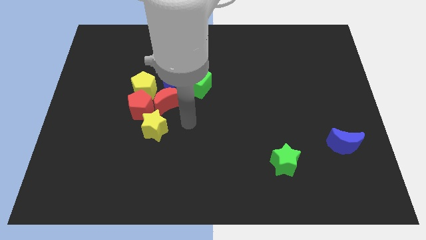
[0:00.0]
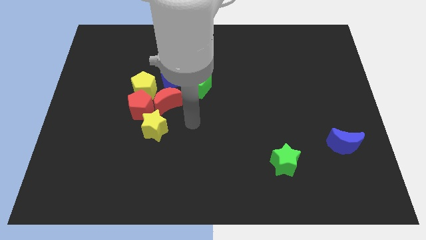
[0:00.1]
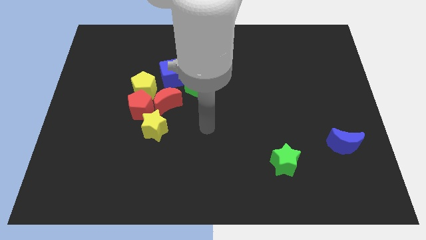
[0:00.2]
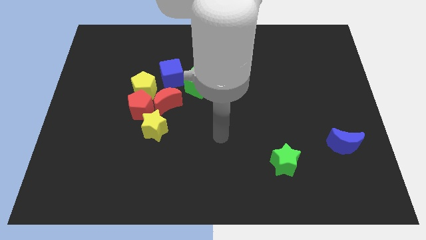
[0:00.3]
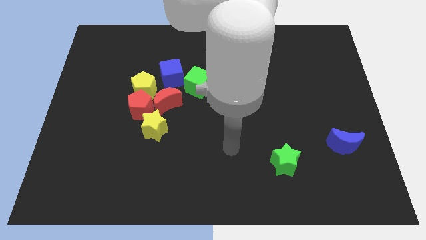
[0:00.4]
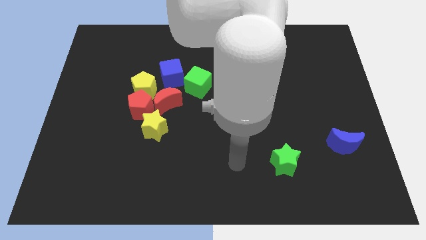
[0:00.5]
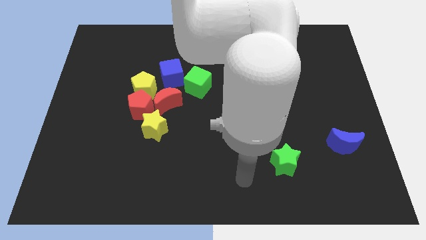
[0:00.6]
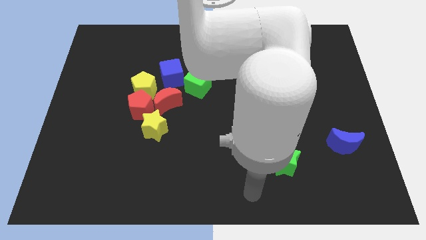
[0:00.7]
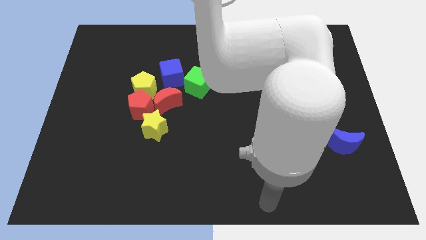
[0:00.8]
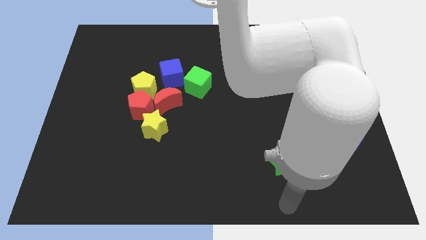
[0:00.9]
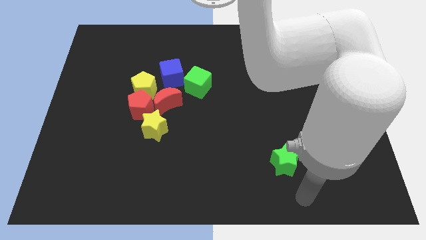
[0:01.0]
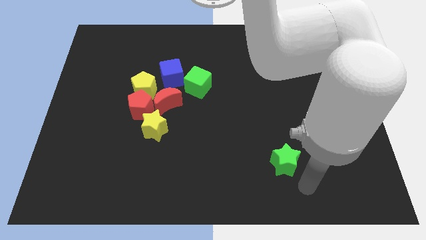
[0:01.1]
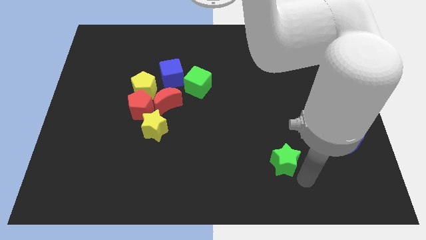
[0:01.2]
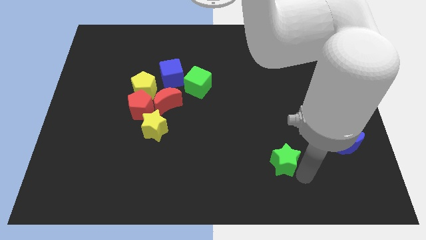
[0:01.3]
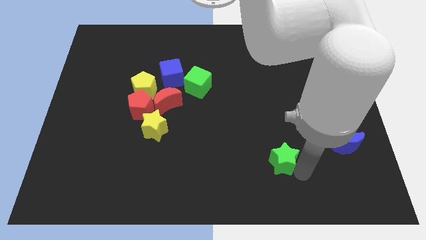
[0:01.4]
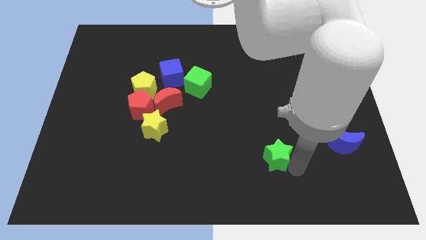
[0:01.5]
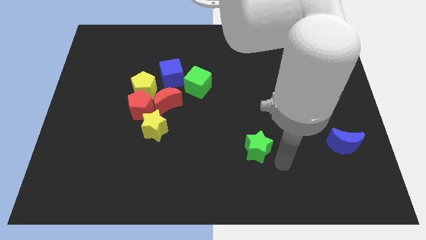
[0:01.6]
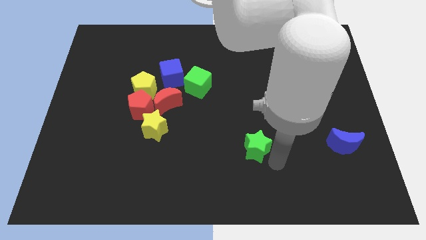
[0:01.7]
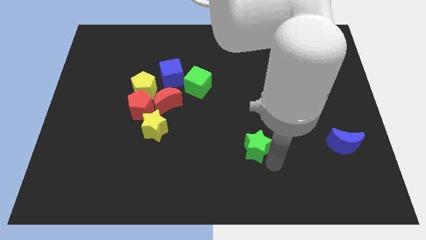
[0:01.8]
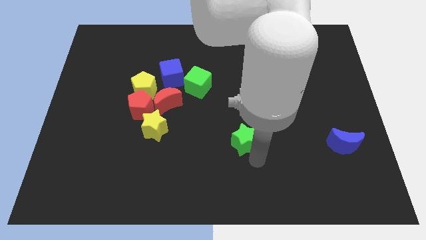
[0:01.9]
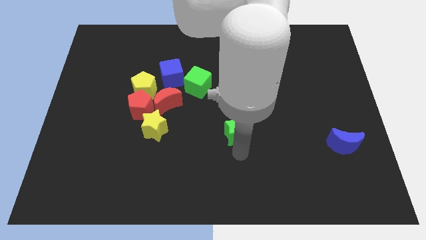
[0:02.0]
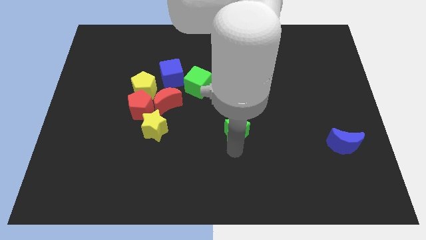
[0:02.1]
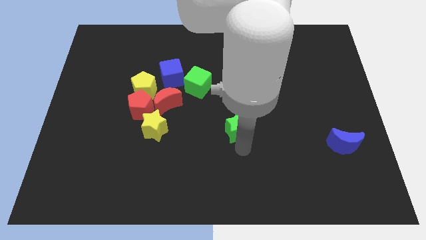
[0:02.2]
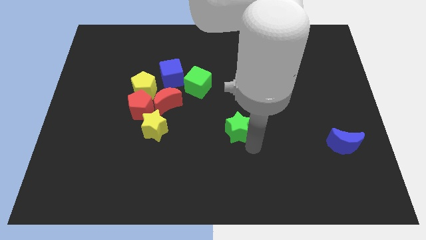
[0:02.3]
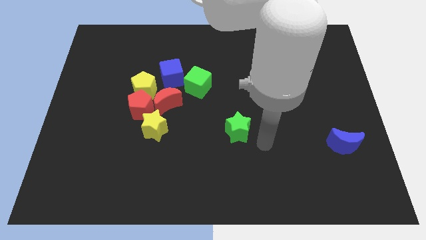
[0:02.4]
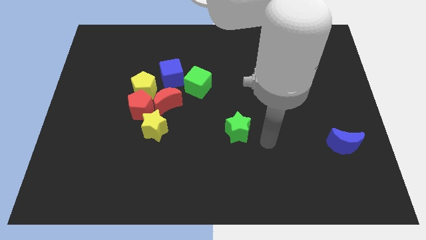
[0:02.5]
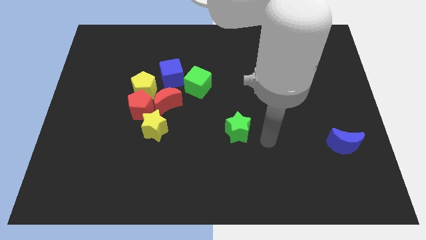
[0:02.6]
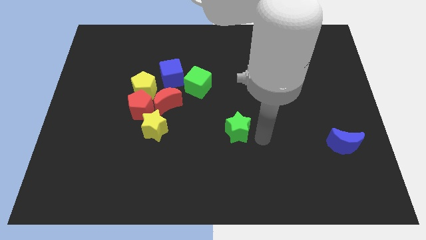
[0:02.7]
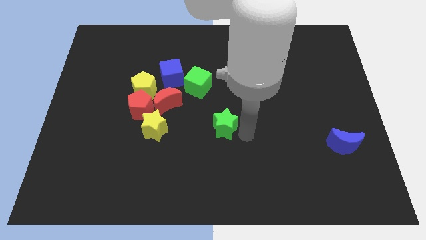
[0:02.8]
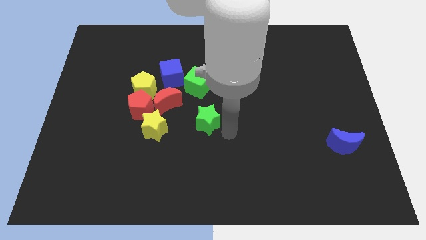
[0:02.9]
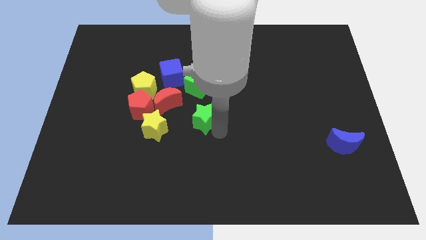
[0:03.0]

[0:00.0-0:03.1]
place the green star at center of the board

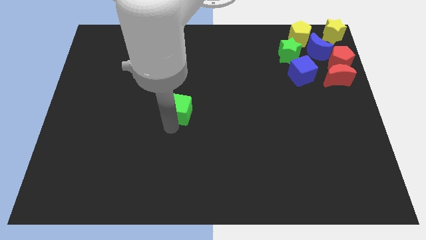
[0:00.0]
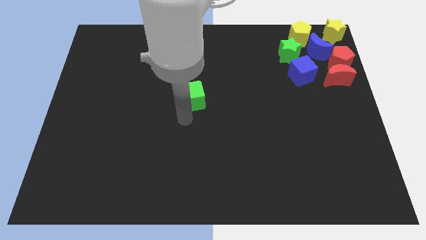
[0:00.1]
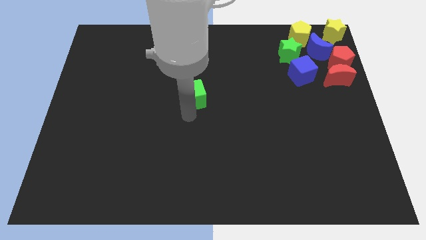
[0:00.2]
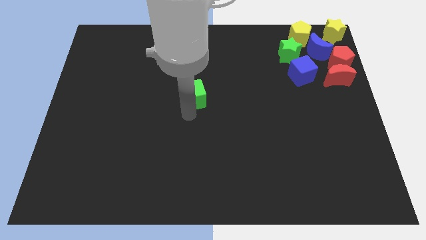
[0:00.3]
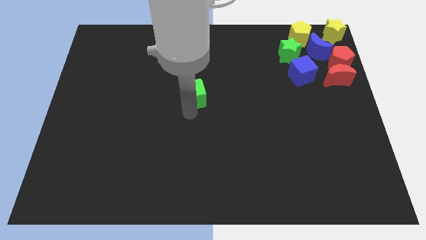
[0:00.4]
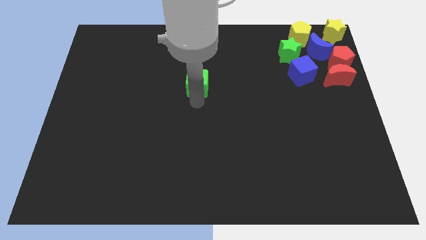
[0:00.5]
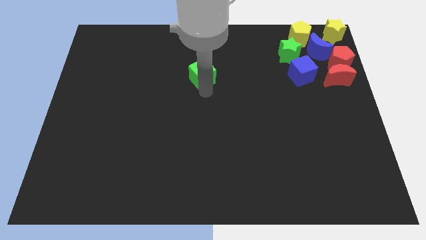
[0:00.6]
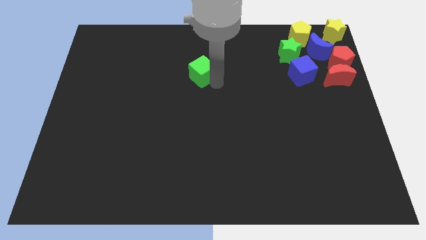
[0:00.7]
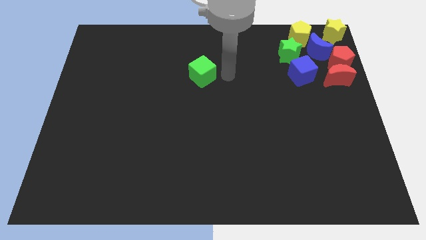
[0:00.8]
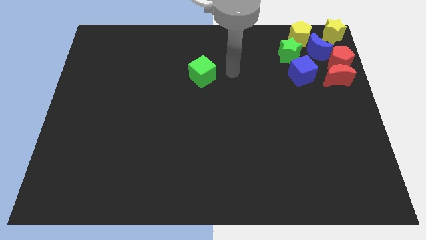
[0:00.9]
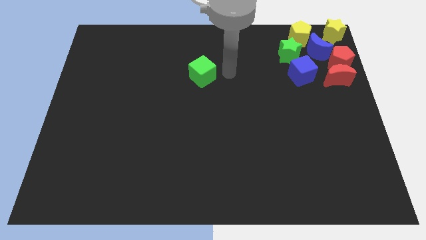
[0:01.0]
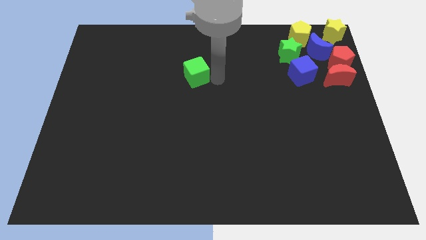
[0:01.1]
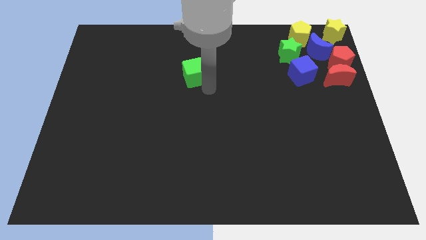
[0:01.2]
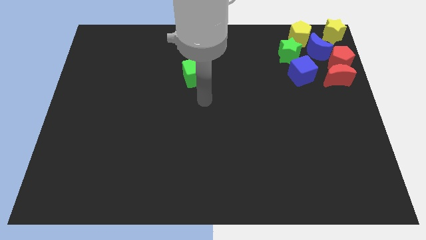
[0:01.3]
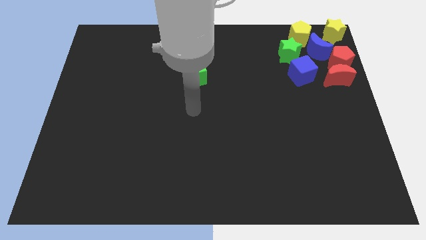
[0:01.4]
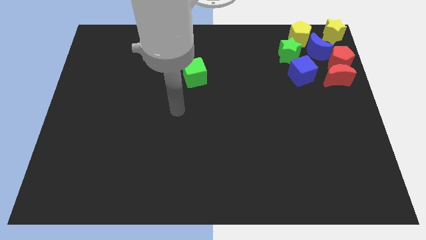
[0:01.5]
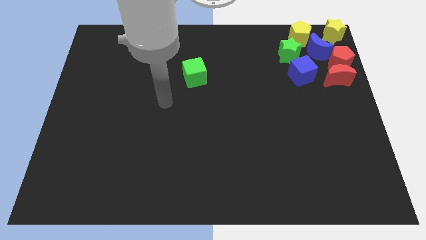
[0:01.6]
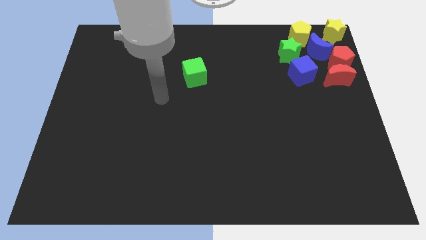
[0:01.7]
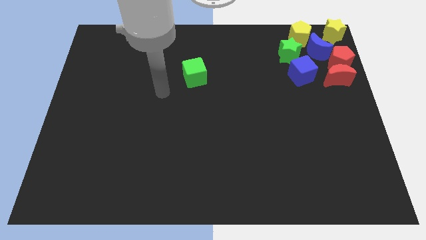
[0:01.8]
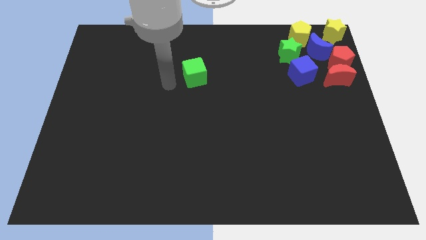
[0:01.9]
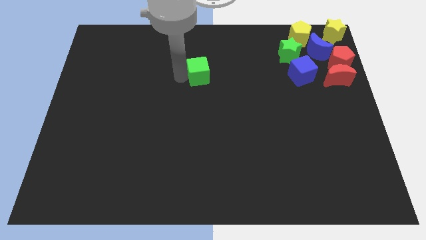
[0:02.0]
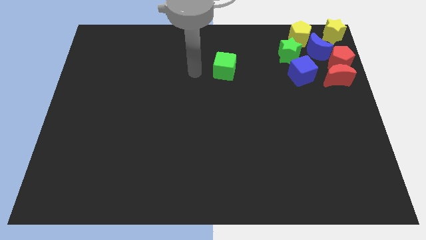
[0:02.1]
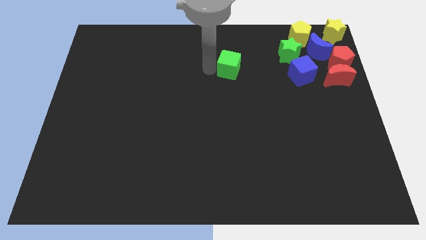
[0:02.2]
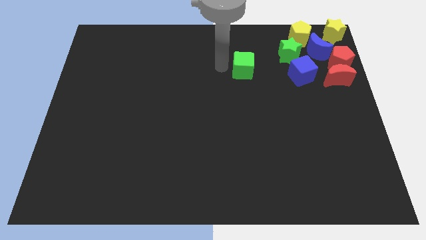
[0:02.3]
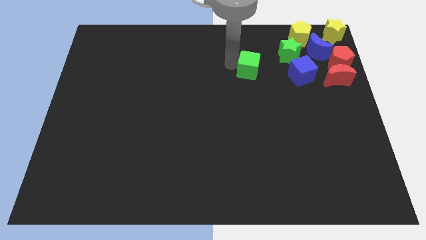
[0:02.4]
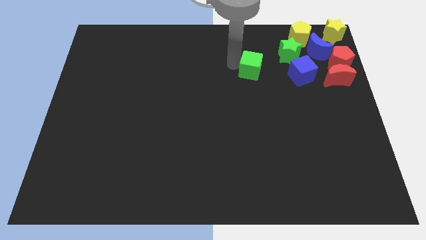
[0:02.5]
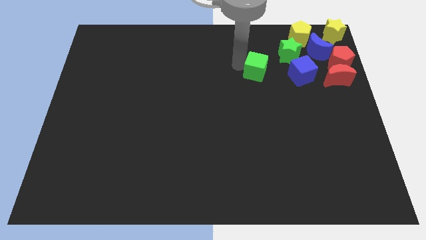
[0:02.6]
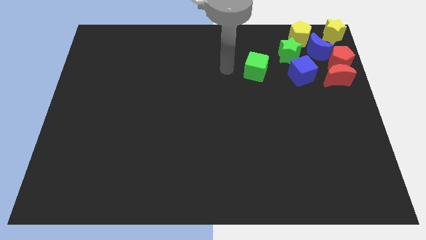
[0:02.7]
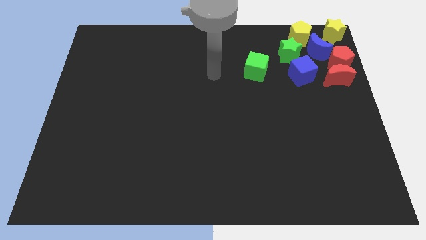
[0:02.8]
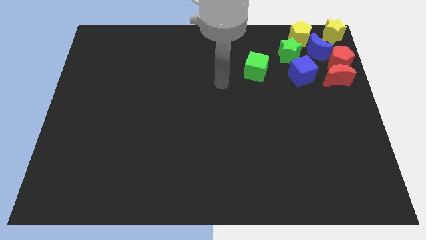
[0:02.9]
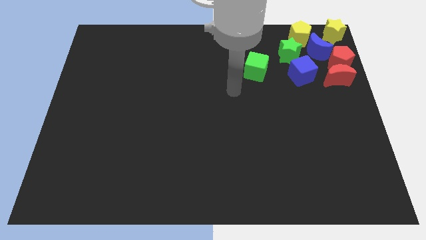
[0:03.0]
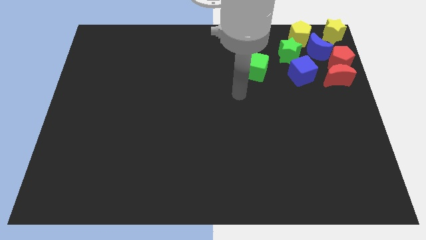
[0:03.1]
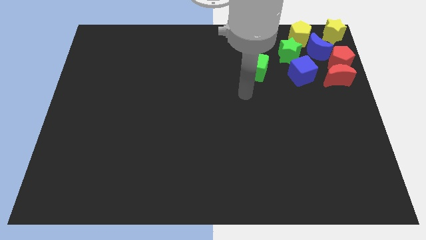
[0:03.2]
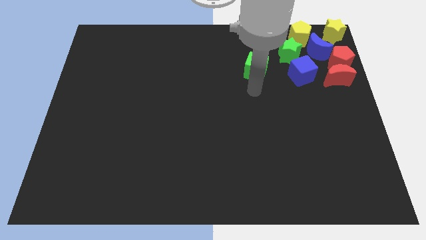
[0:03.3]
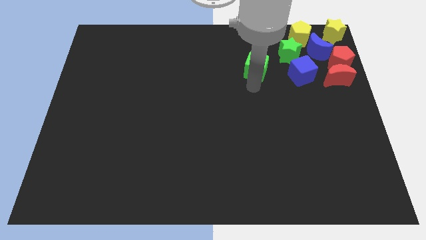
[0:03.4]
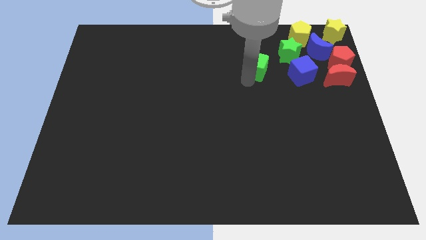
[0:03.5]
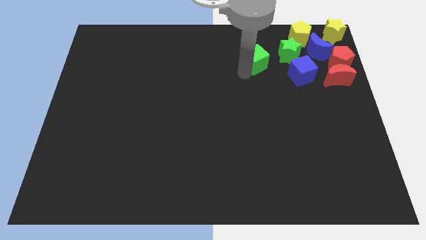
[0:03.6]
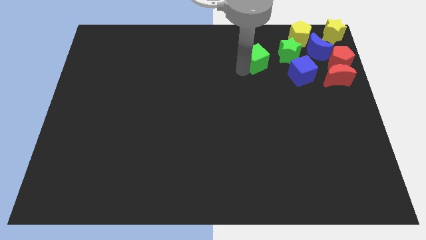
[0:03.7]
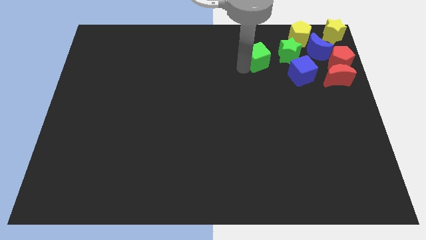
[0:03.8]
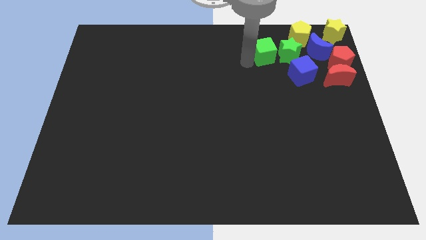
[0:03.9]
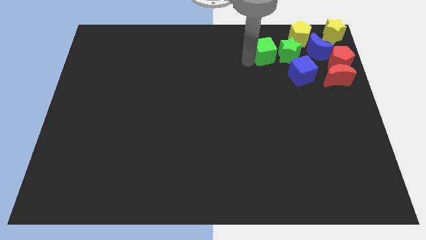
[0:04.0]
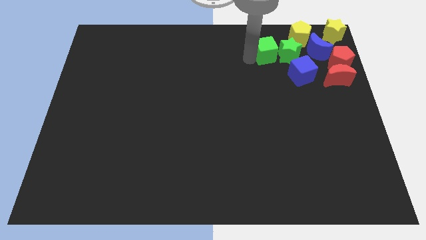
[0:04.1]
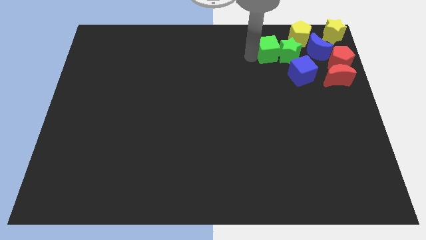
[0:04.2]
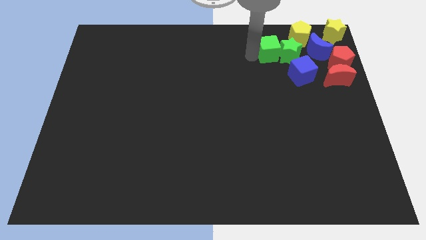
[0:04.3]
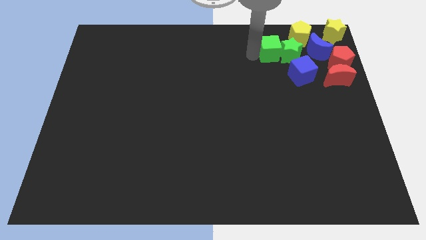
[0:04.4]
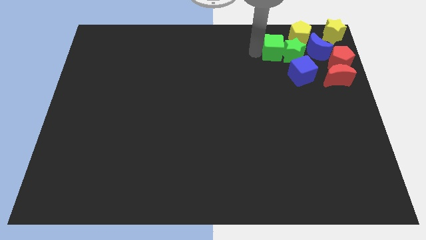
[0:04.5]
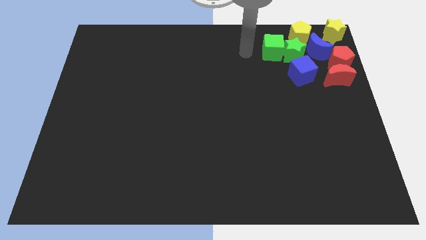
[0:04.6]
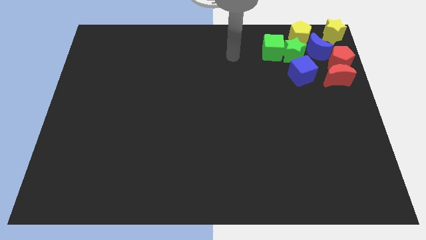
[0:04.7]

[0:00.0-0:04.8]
push the green cube into the green star

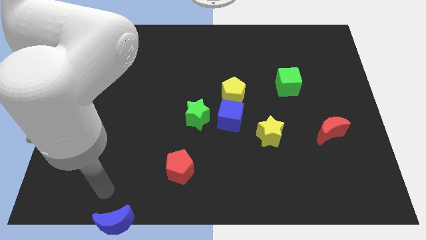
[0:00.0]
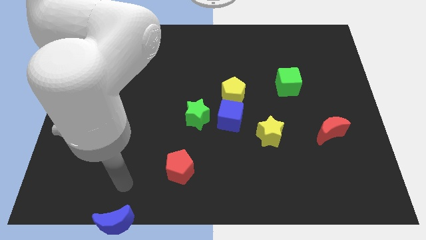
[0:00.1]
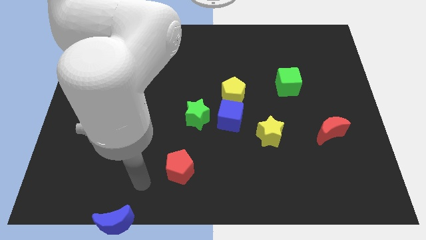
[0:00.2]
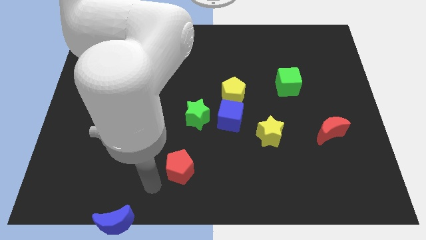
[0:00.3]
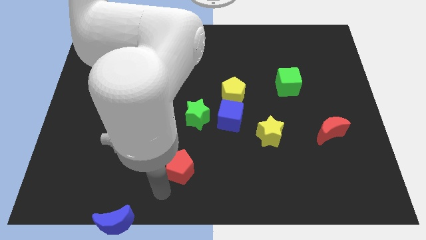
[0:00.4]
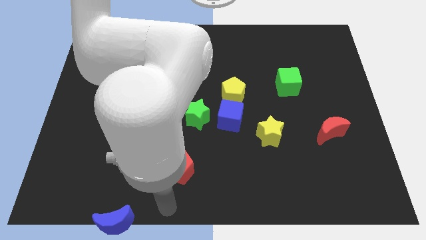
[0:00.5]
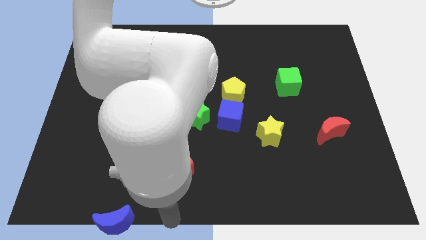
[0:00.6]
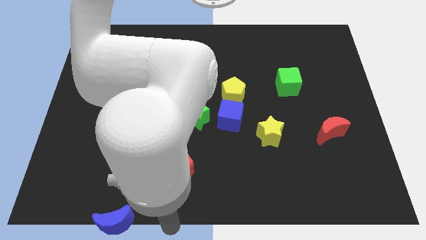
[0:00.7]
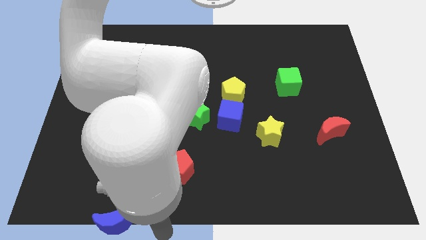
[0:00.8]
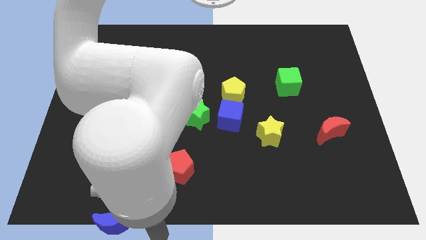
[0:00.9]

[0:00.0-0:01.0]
move your arm to the right side of the blue moon
